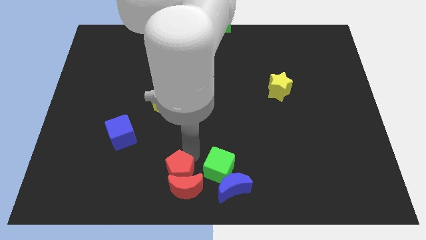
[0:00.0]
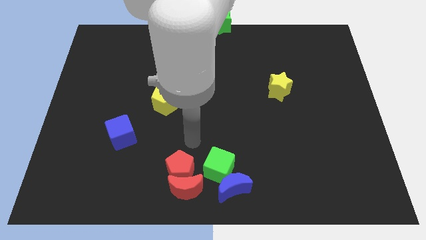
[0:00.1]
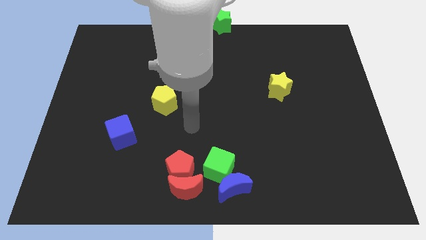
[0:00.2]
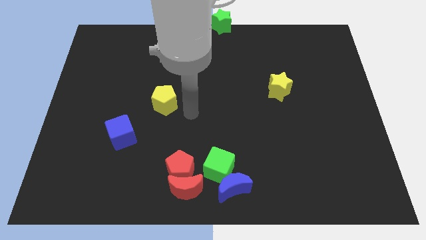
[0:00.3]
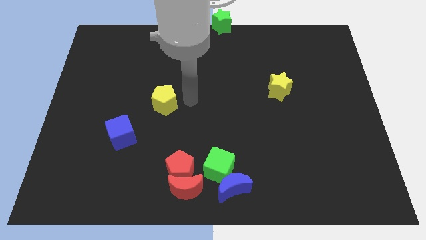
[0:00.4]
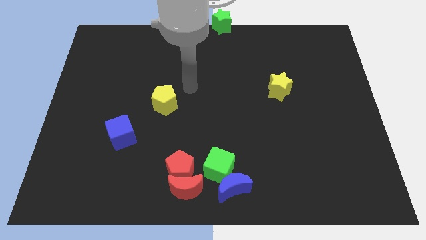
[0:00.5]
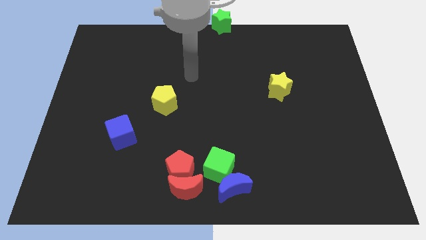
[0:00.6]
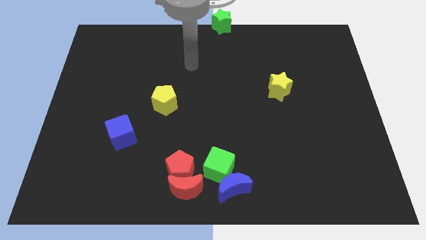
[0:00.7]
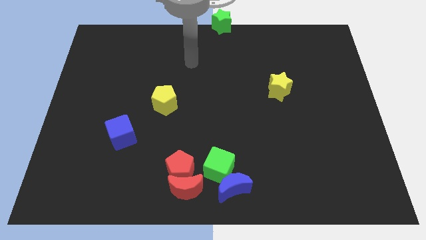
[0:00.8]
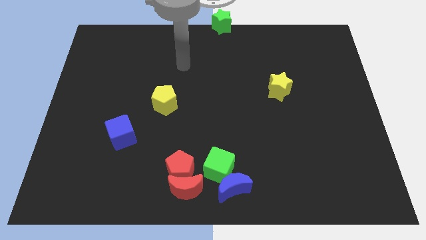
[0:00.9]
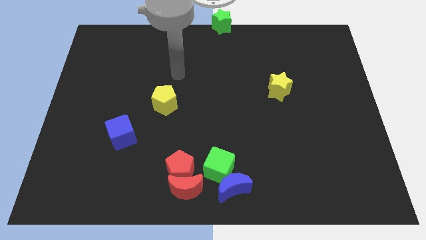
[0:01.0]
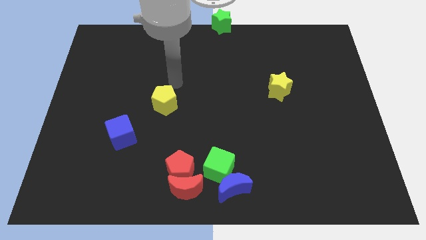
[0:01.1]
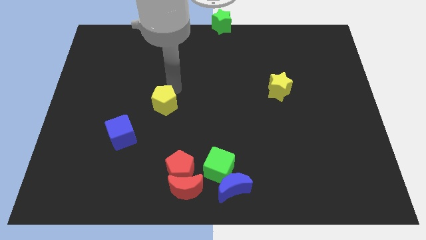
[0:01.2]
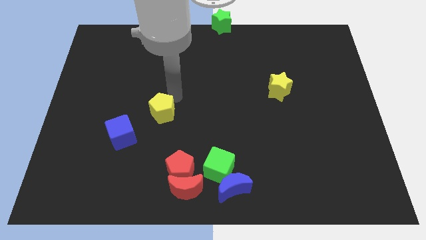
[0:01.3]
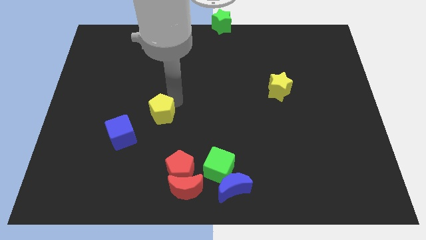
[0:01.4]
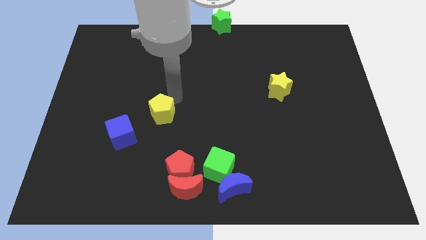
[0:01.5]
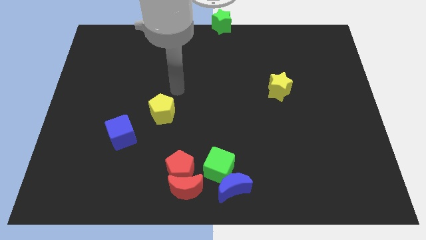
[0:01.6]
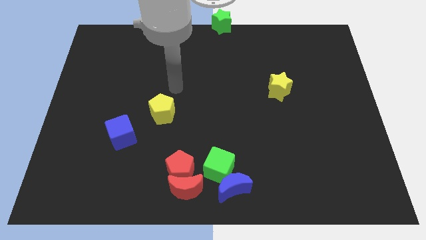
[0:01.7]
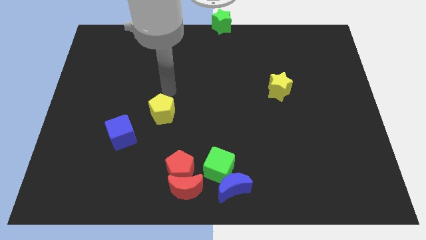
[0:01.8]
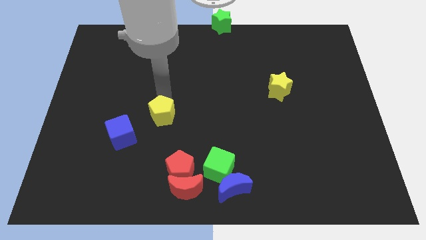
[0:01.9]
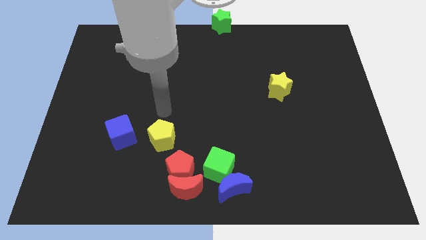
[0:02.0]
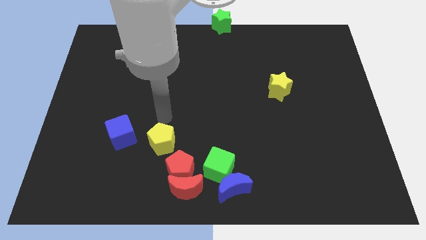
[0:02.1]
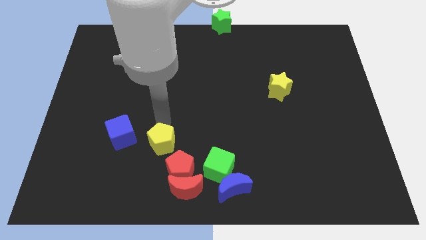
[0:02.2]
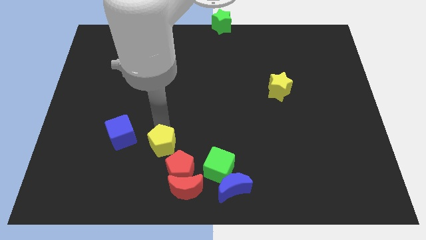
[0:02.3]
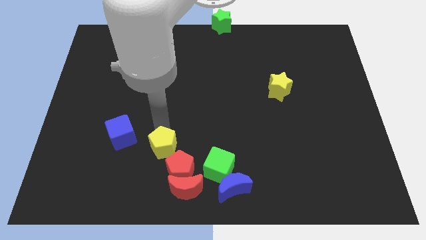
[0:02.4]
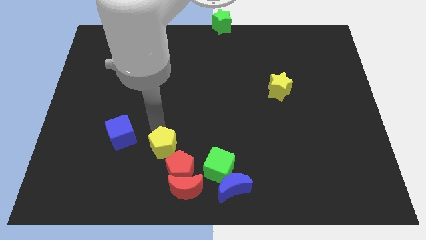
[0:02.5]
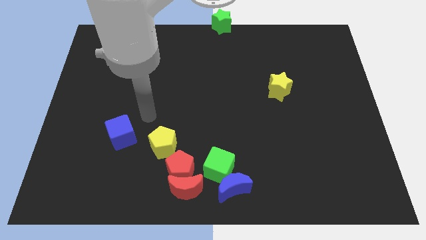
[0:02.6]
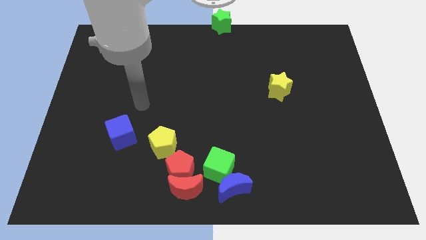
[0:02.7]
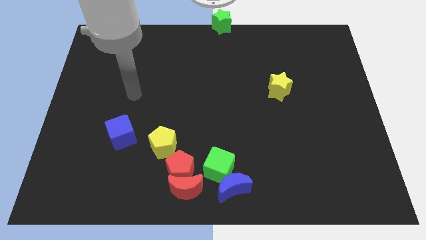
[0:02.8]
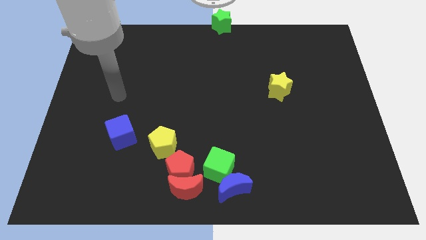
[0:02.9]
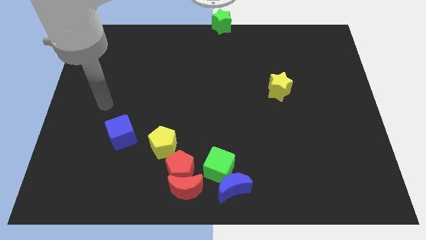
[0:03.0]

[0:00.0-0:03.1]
push the yellow pentagon towards red pentagon

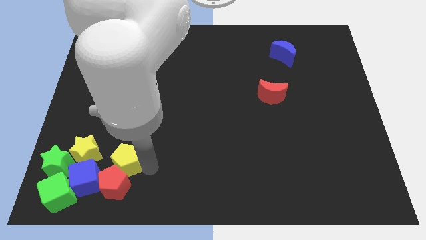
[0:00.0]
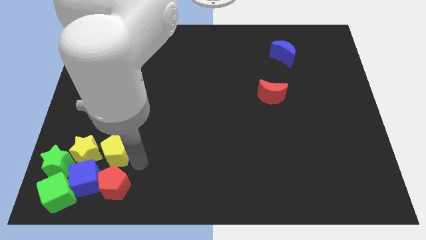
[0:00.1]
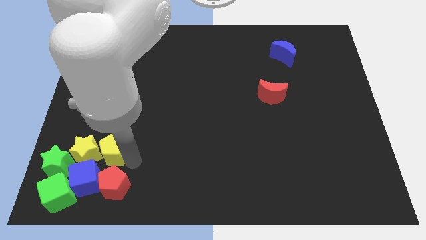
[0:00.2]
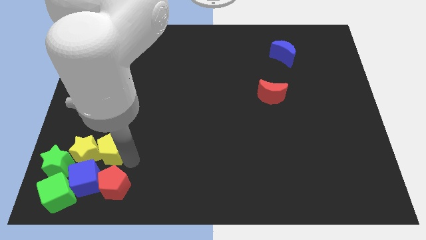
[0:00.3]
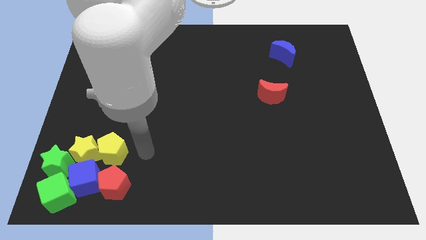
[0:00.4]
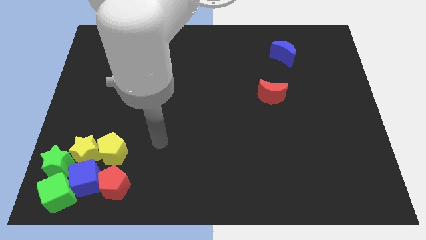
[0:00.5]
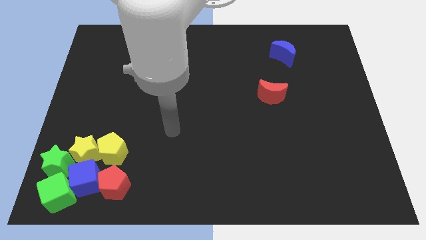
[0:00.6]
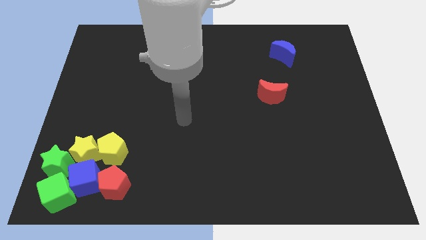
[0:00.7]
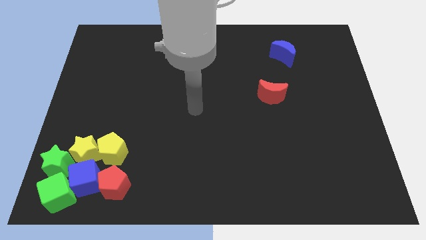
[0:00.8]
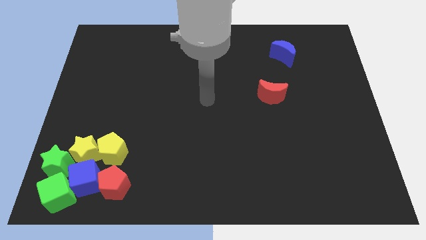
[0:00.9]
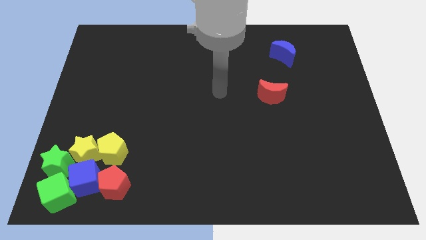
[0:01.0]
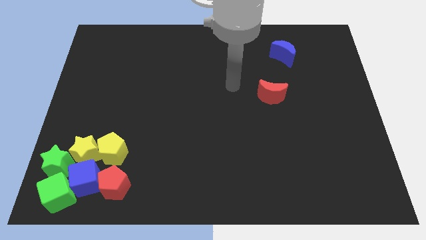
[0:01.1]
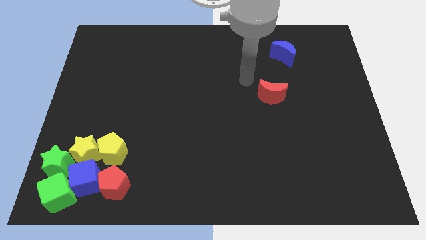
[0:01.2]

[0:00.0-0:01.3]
move the yellow pentagon right to the yellow star

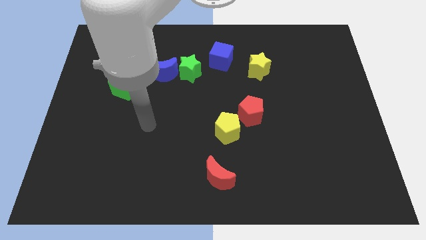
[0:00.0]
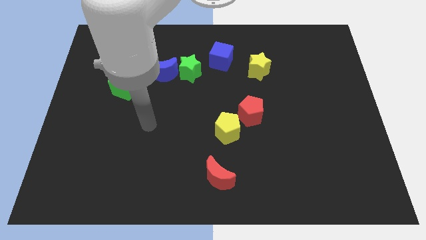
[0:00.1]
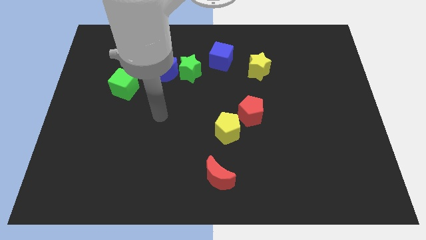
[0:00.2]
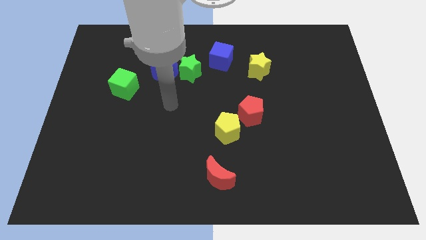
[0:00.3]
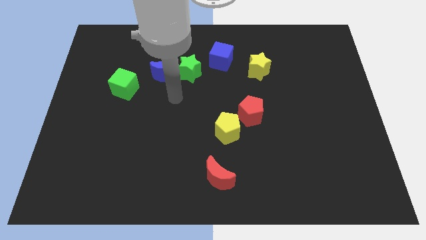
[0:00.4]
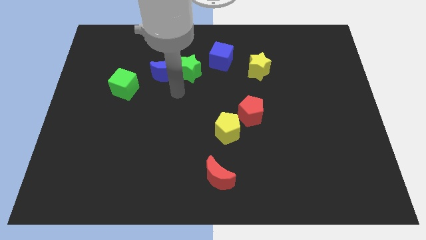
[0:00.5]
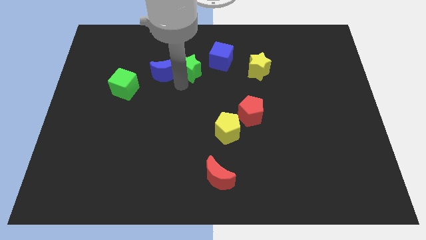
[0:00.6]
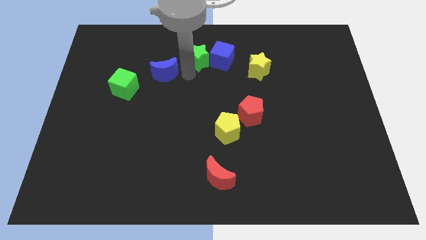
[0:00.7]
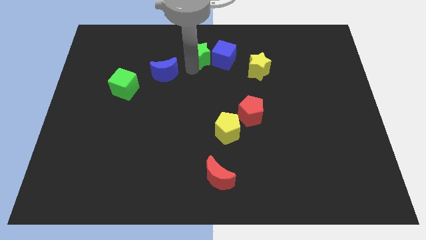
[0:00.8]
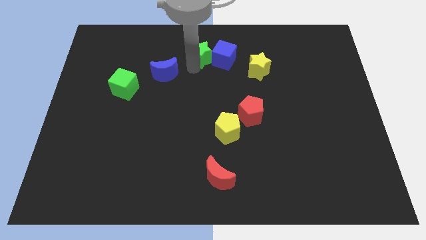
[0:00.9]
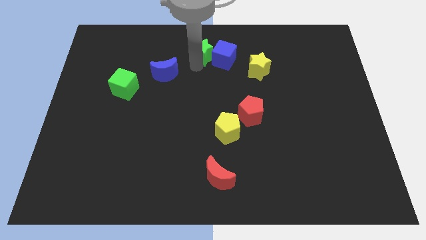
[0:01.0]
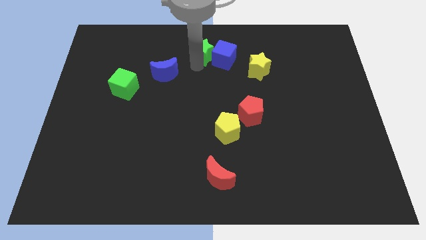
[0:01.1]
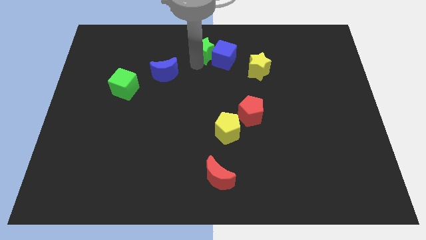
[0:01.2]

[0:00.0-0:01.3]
place the green star to the left of the blue cube

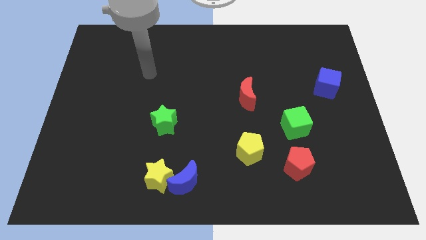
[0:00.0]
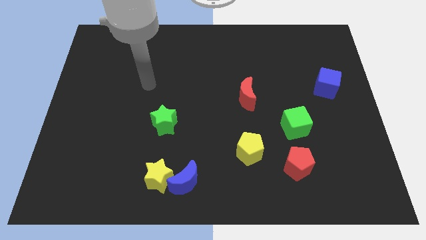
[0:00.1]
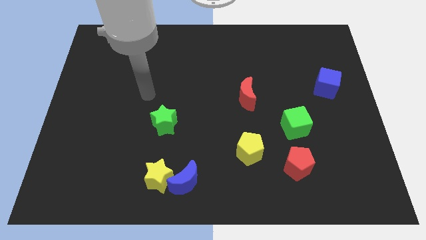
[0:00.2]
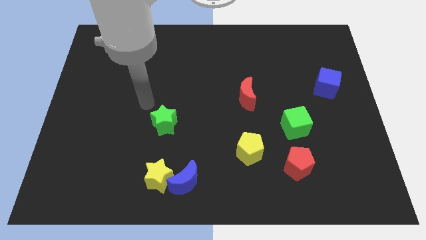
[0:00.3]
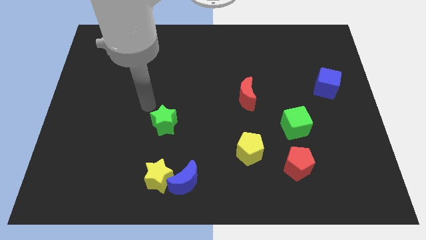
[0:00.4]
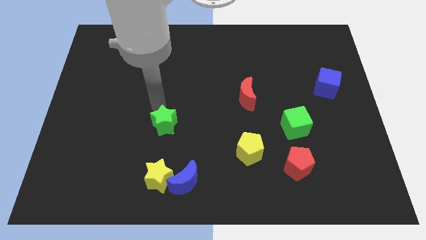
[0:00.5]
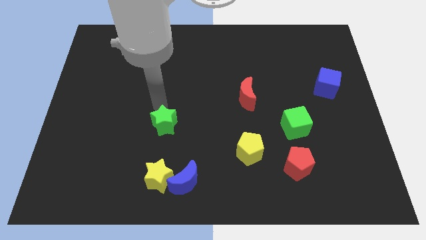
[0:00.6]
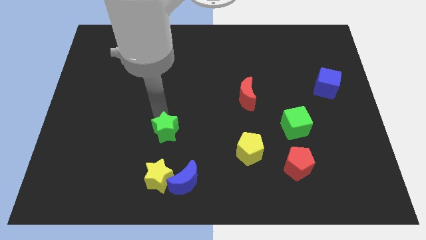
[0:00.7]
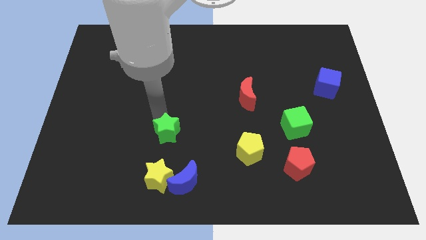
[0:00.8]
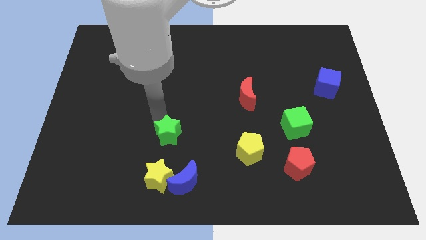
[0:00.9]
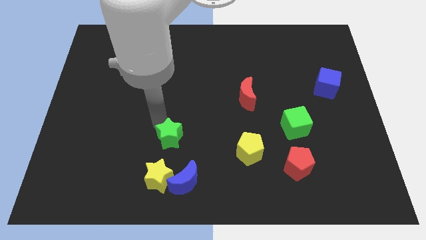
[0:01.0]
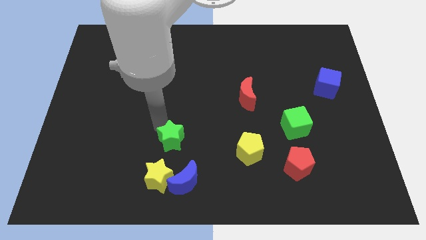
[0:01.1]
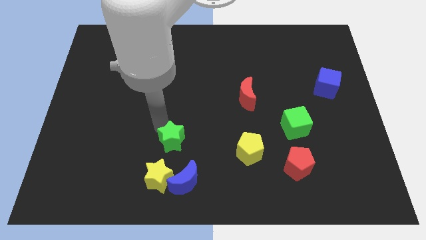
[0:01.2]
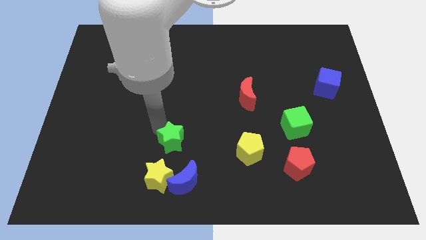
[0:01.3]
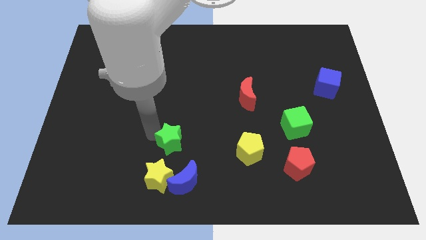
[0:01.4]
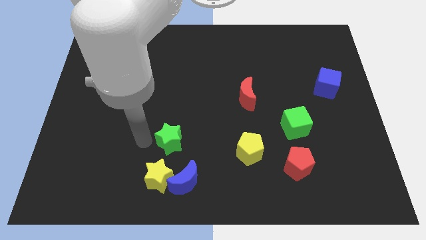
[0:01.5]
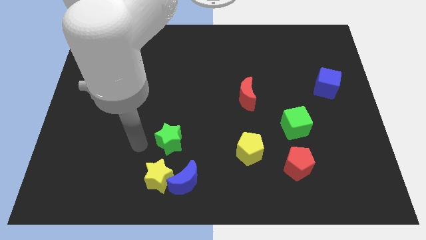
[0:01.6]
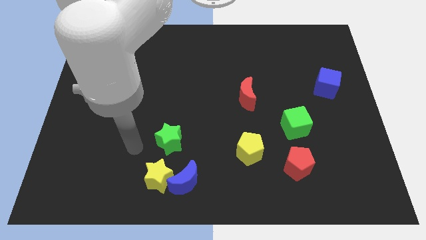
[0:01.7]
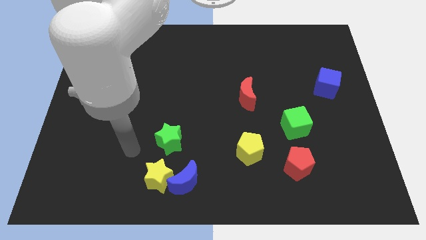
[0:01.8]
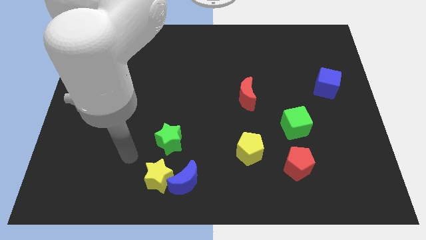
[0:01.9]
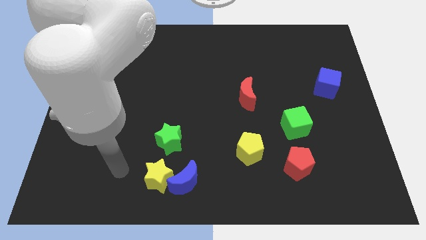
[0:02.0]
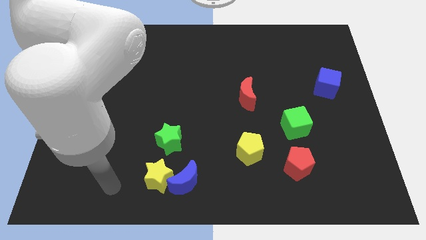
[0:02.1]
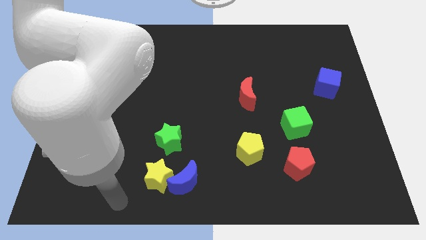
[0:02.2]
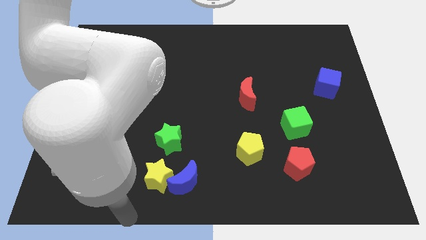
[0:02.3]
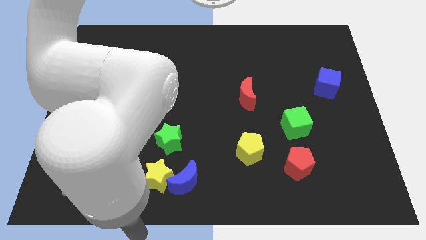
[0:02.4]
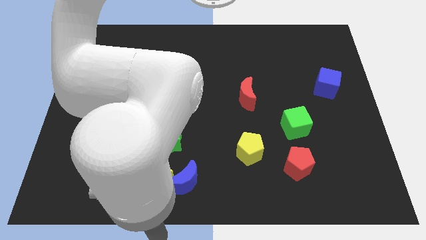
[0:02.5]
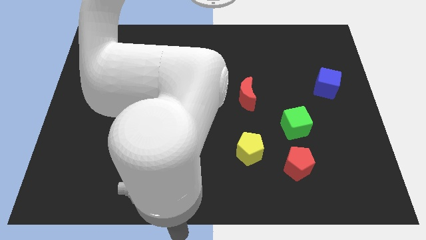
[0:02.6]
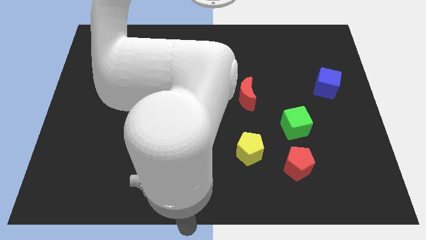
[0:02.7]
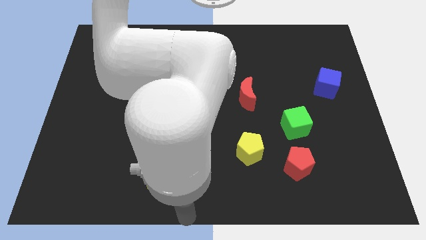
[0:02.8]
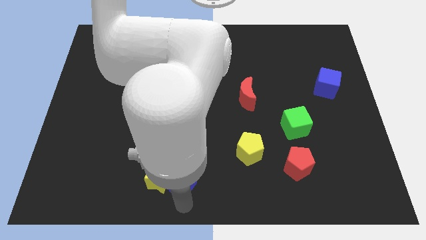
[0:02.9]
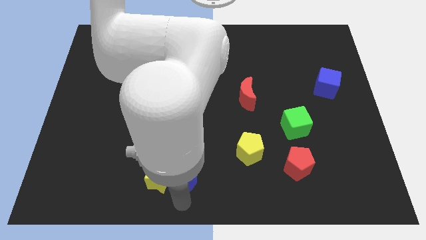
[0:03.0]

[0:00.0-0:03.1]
push the green star above the yellow star
